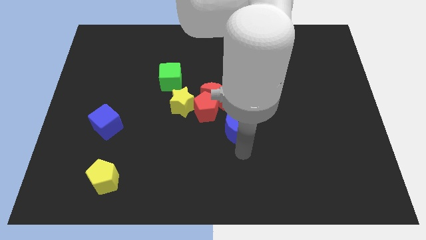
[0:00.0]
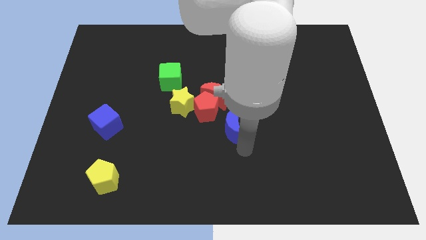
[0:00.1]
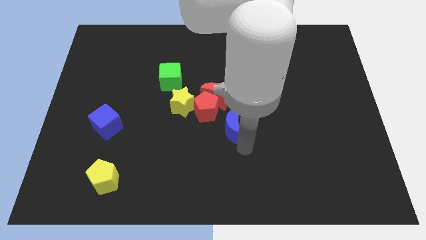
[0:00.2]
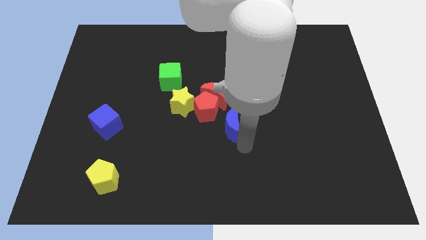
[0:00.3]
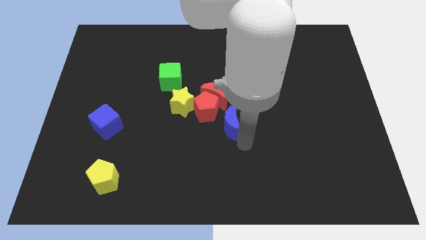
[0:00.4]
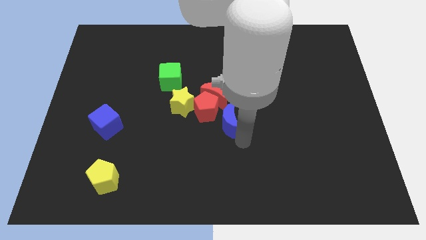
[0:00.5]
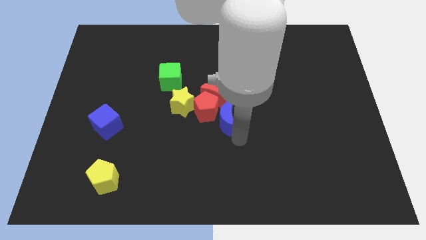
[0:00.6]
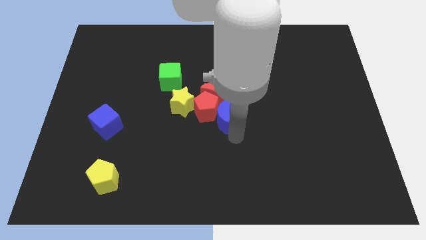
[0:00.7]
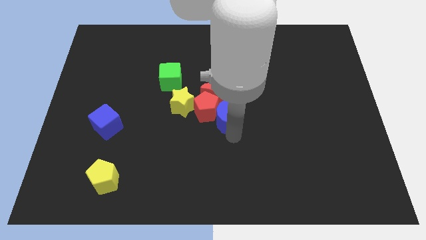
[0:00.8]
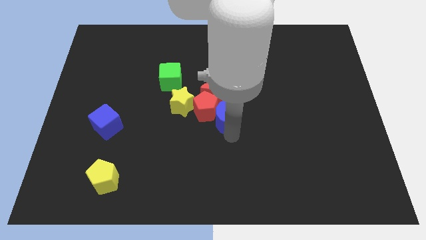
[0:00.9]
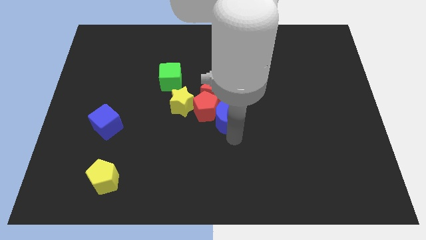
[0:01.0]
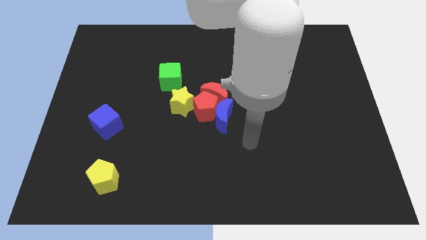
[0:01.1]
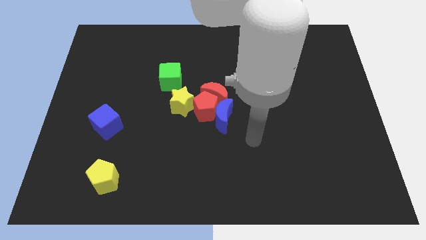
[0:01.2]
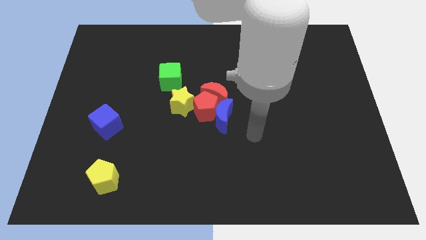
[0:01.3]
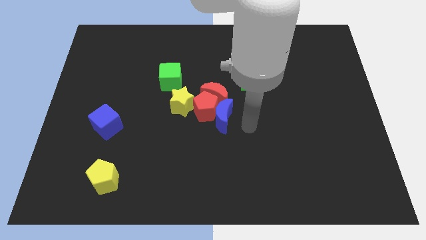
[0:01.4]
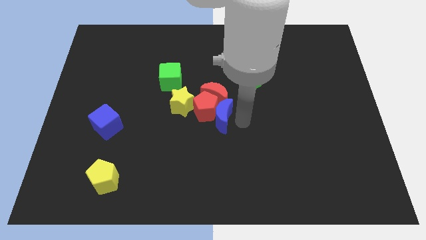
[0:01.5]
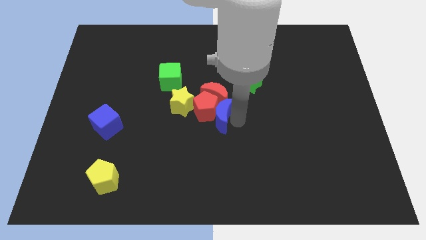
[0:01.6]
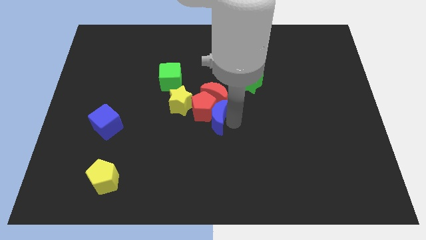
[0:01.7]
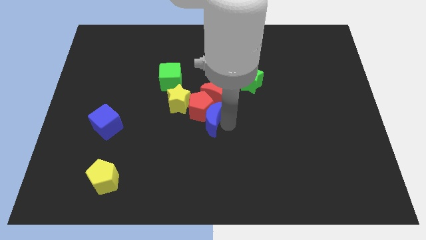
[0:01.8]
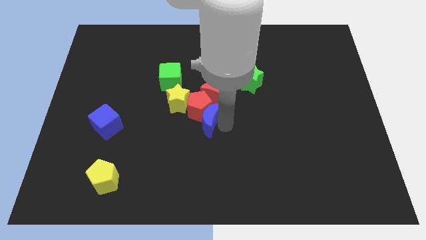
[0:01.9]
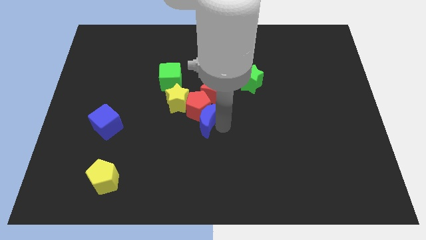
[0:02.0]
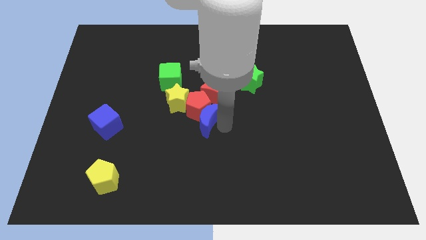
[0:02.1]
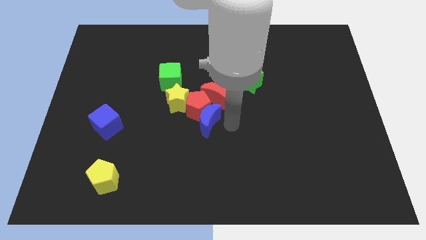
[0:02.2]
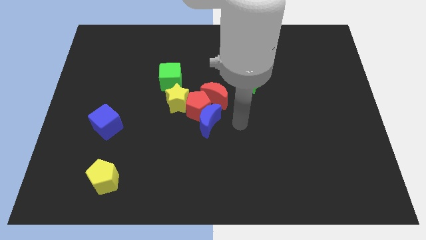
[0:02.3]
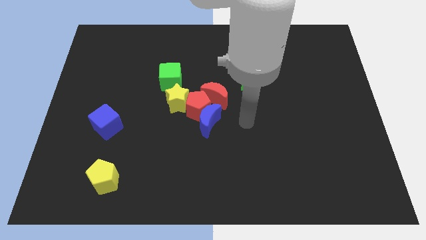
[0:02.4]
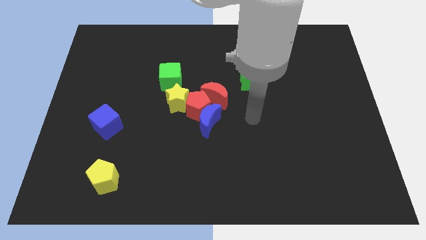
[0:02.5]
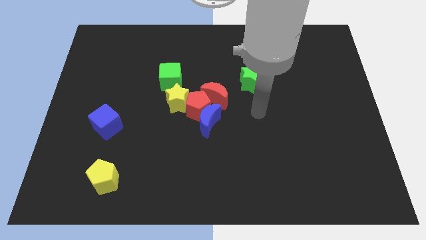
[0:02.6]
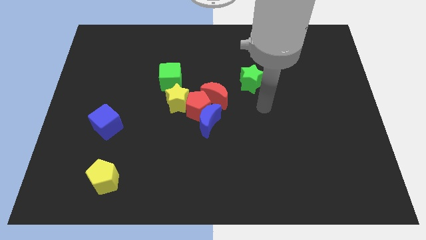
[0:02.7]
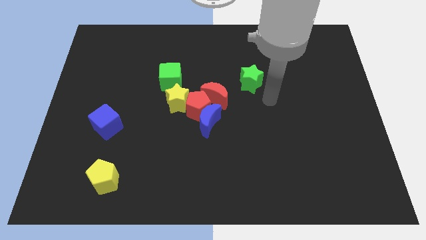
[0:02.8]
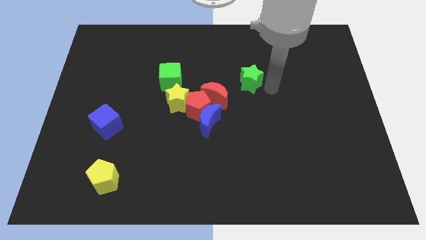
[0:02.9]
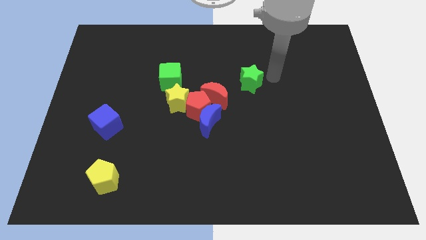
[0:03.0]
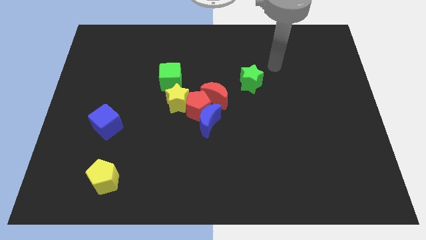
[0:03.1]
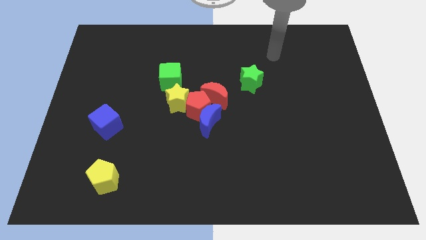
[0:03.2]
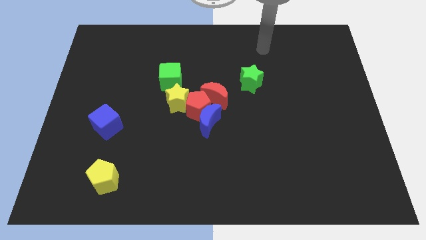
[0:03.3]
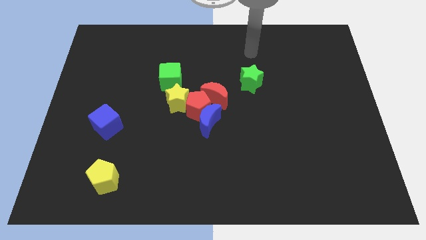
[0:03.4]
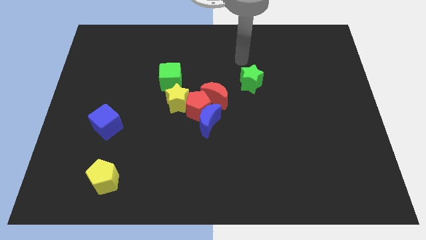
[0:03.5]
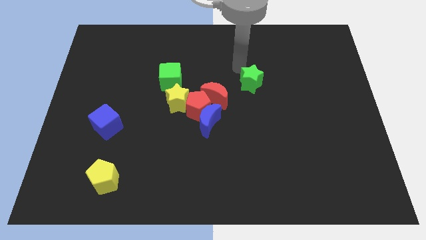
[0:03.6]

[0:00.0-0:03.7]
place the arm near the green star

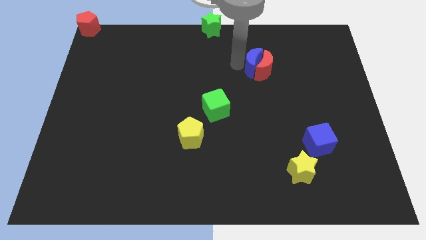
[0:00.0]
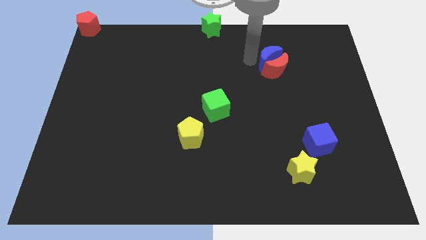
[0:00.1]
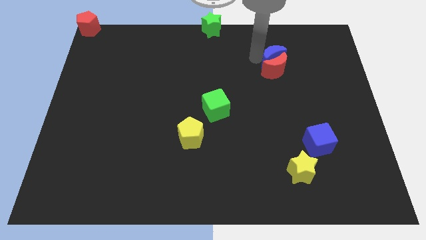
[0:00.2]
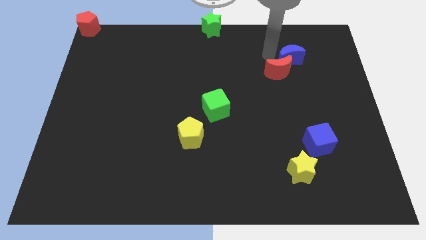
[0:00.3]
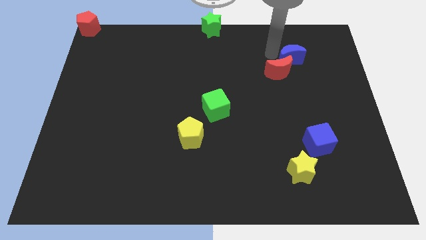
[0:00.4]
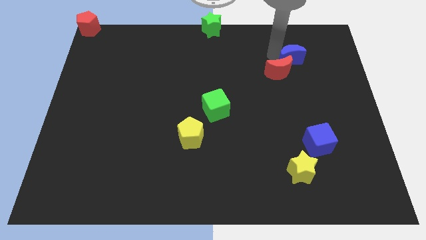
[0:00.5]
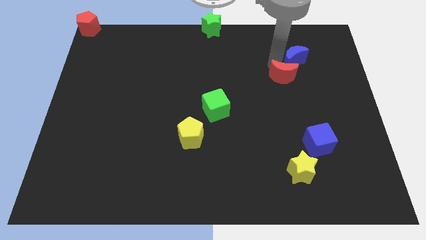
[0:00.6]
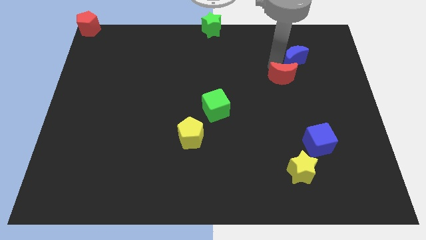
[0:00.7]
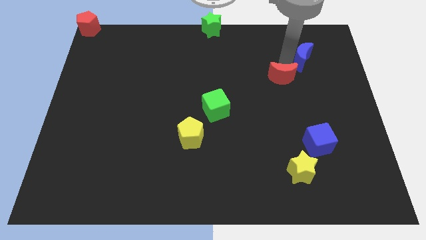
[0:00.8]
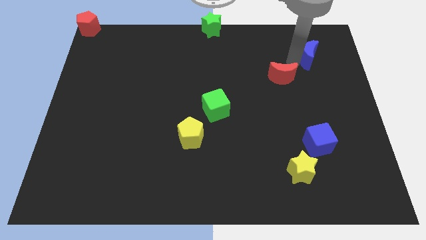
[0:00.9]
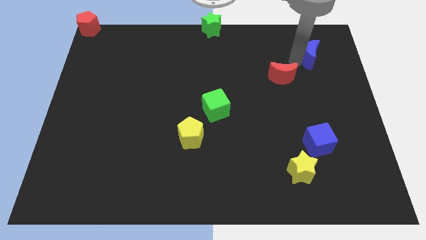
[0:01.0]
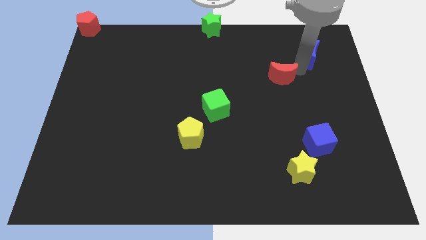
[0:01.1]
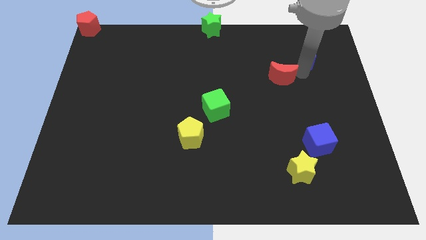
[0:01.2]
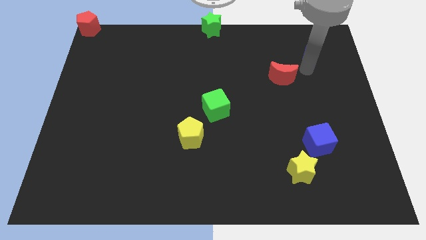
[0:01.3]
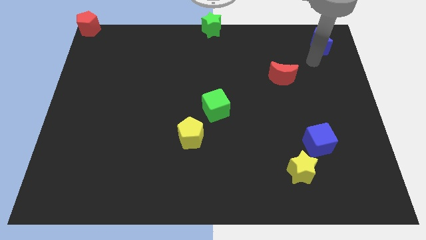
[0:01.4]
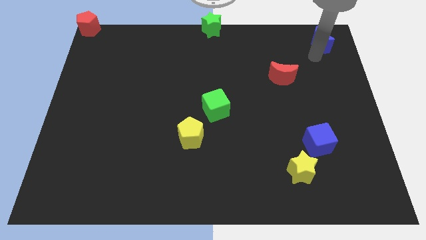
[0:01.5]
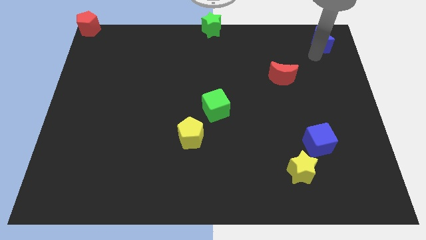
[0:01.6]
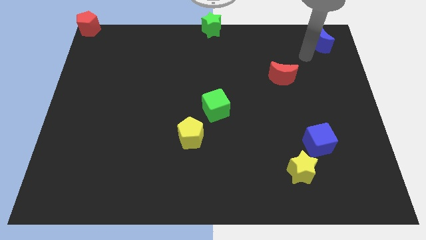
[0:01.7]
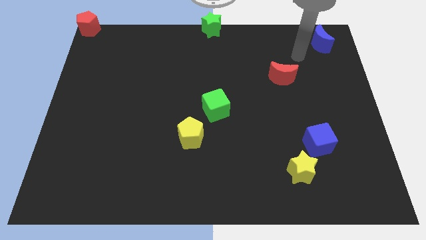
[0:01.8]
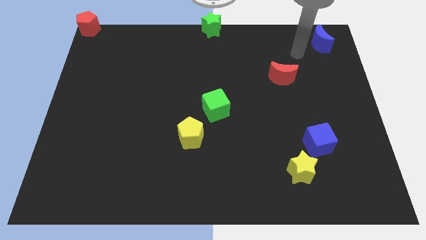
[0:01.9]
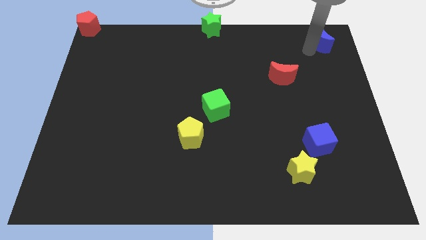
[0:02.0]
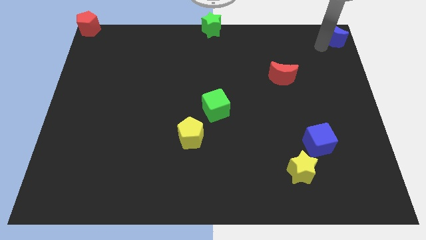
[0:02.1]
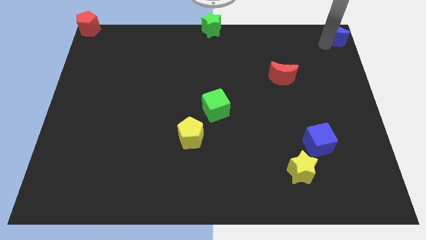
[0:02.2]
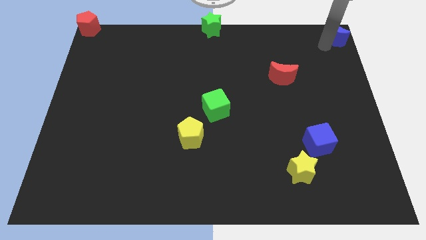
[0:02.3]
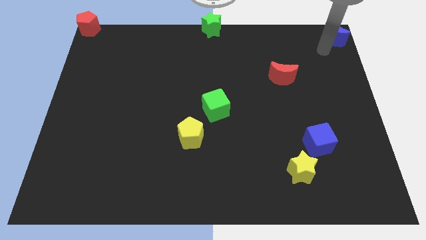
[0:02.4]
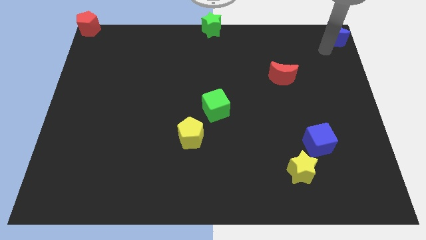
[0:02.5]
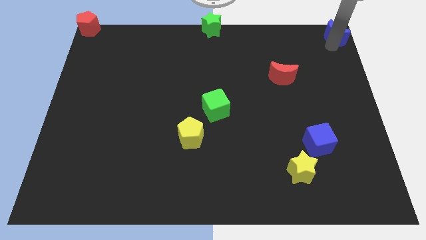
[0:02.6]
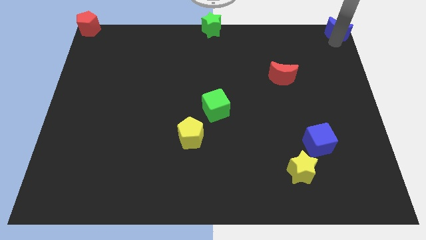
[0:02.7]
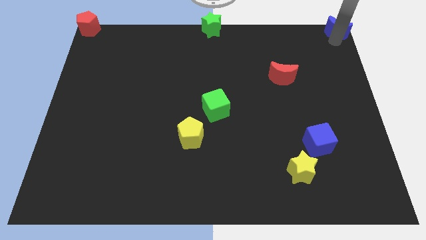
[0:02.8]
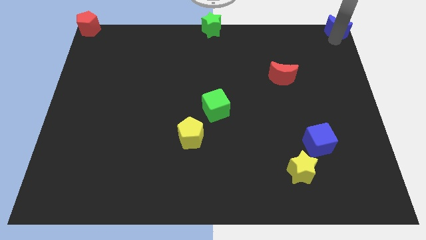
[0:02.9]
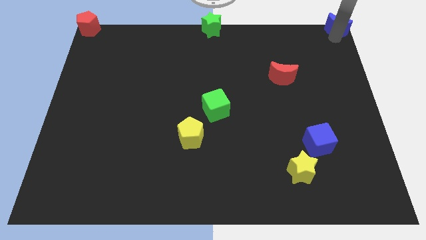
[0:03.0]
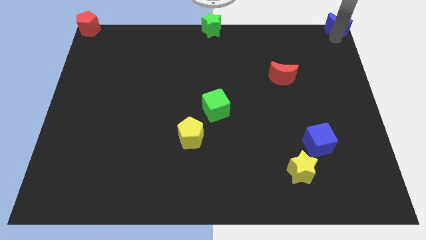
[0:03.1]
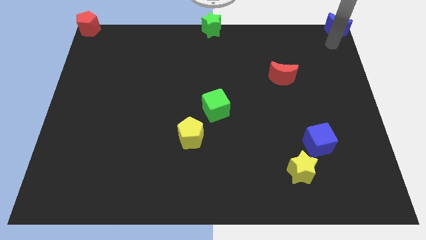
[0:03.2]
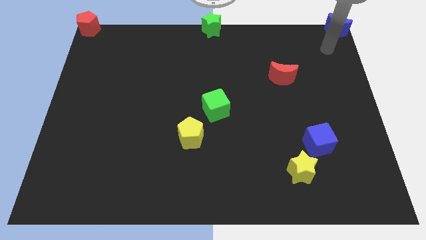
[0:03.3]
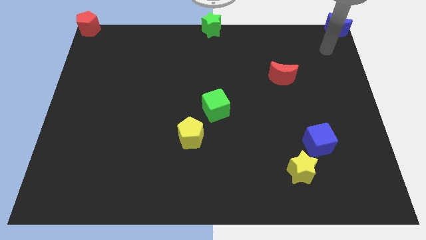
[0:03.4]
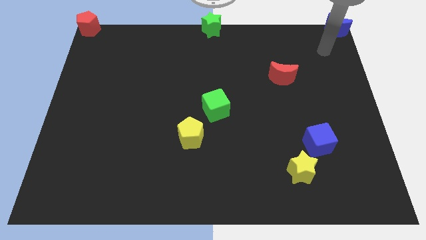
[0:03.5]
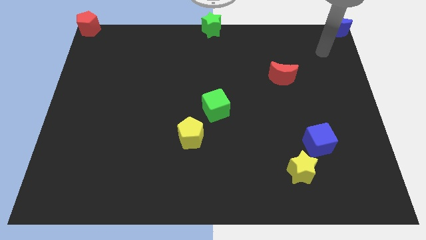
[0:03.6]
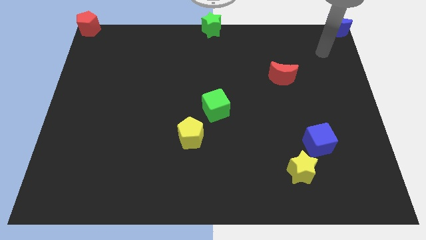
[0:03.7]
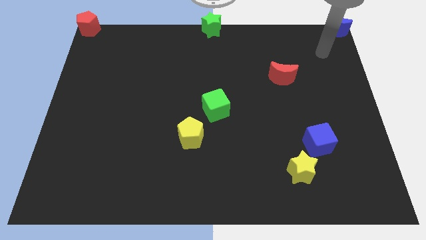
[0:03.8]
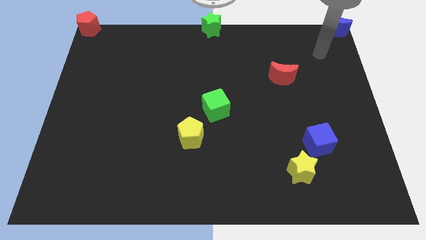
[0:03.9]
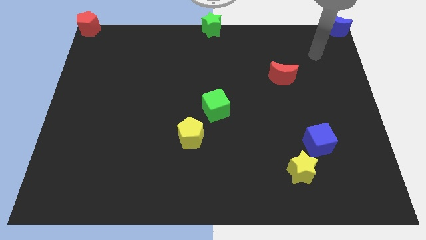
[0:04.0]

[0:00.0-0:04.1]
place the blue crescent to the top right corner of the board

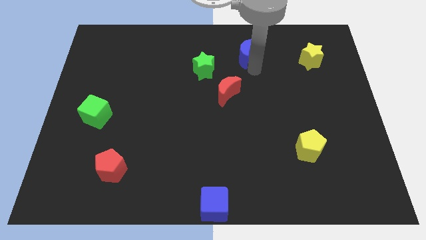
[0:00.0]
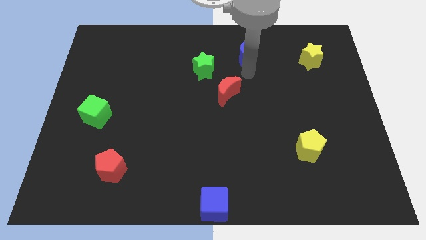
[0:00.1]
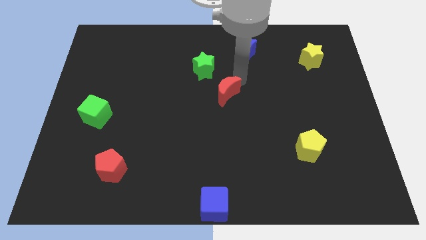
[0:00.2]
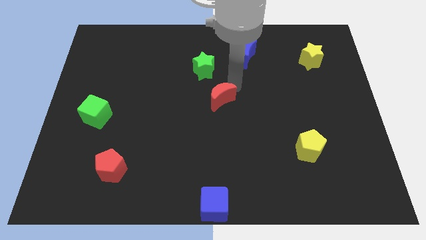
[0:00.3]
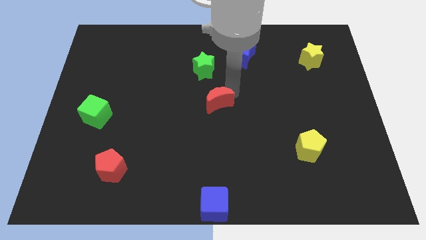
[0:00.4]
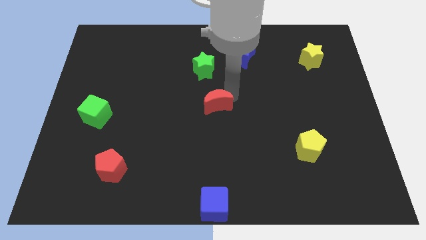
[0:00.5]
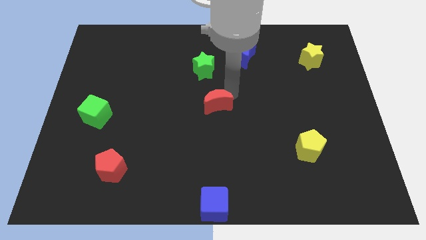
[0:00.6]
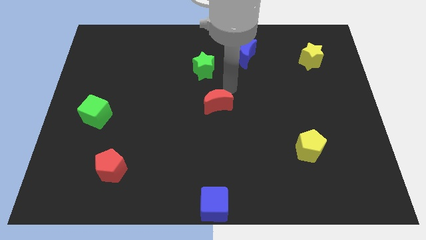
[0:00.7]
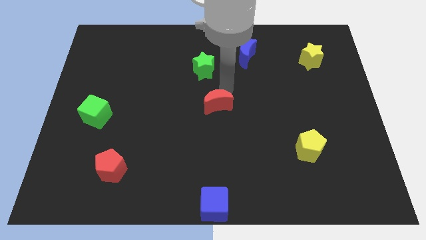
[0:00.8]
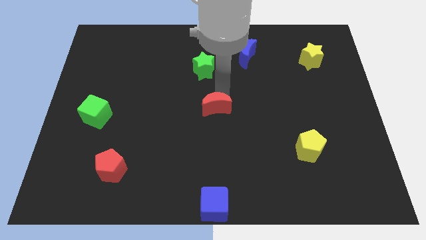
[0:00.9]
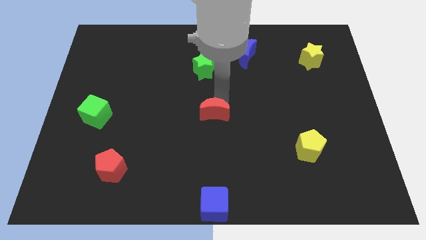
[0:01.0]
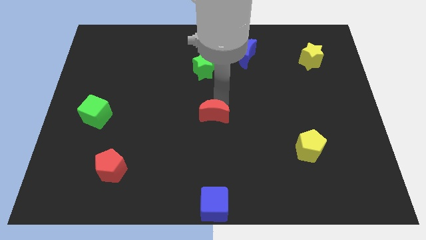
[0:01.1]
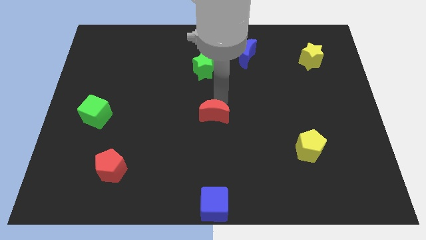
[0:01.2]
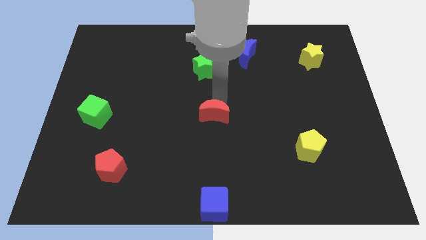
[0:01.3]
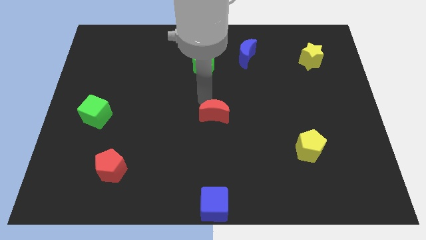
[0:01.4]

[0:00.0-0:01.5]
put the red crescent above the blue cube
